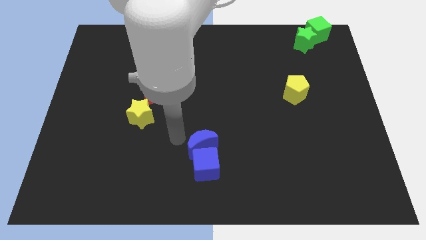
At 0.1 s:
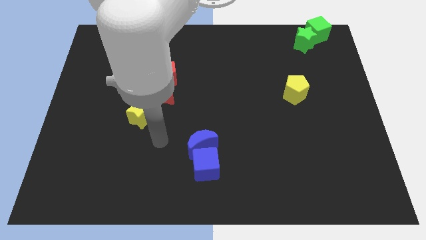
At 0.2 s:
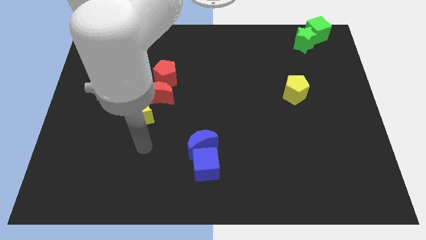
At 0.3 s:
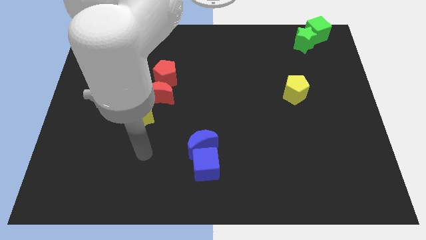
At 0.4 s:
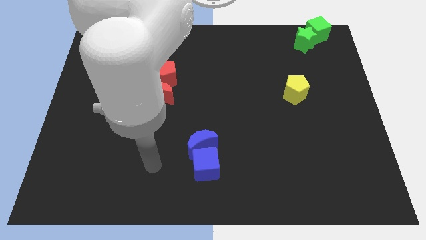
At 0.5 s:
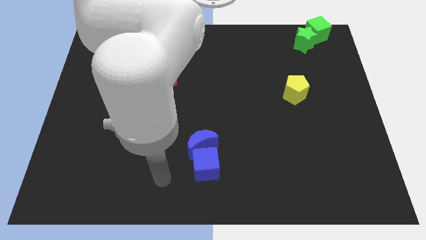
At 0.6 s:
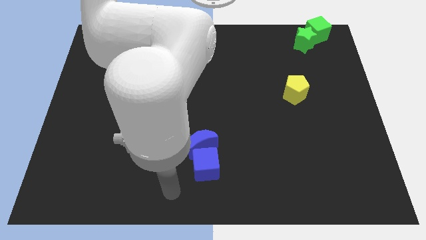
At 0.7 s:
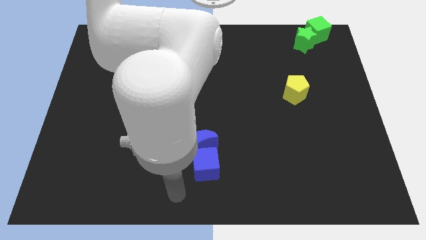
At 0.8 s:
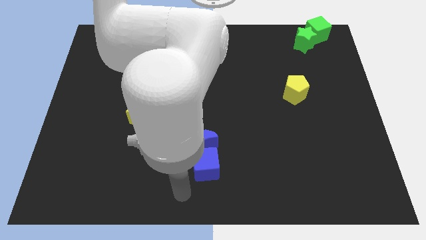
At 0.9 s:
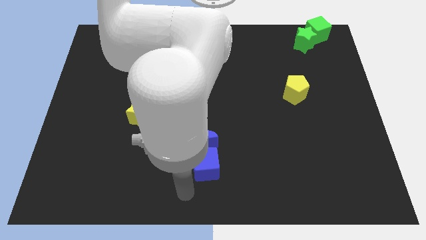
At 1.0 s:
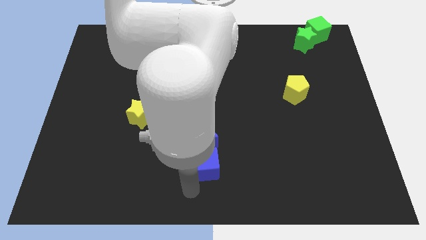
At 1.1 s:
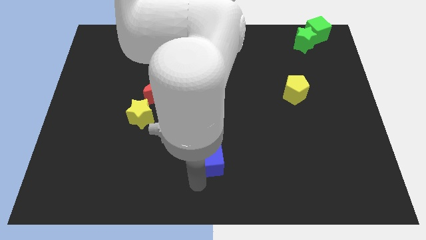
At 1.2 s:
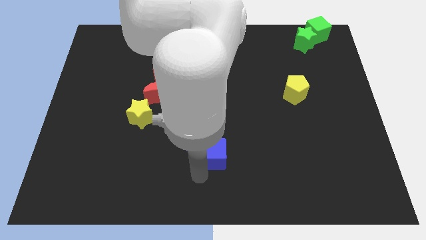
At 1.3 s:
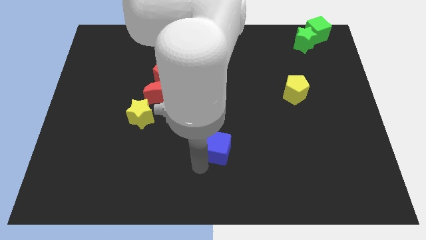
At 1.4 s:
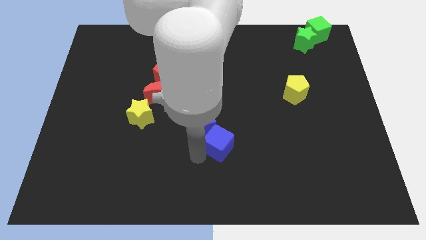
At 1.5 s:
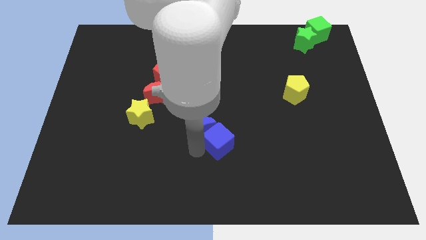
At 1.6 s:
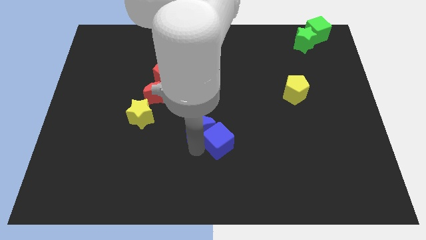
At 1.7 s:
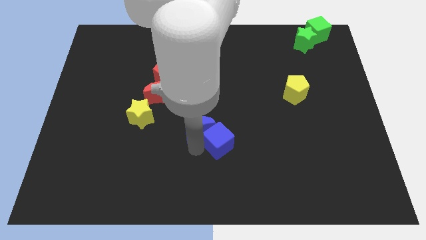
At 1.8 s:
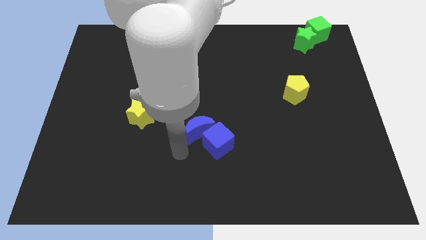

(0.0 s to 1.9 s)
slide both the blue blocks towards the center

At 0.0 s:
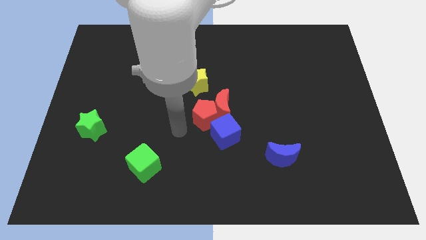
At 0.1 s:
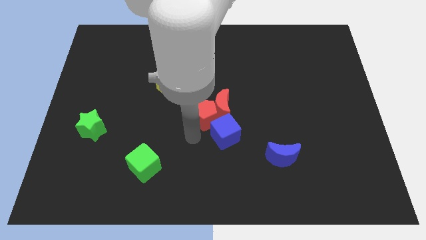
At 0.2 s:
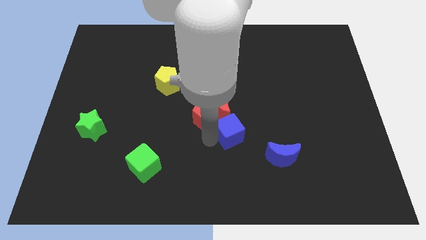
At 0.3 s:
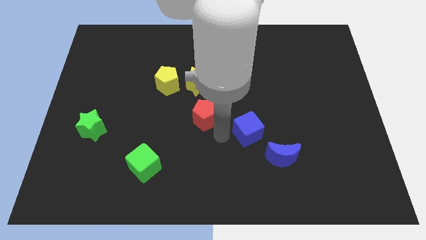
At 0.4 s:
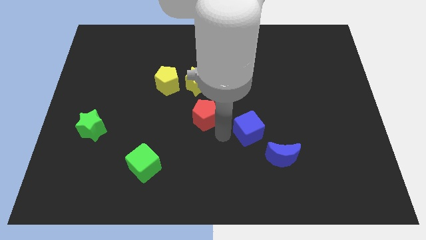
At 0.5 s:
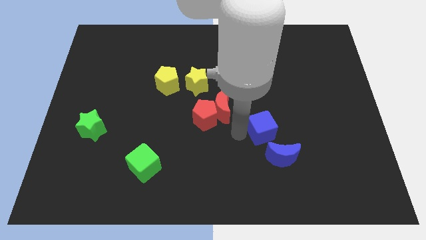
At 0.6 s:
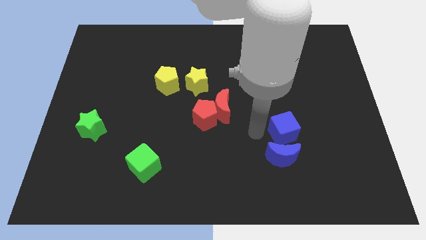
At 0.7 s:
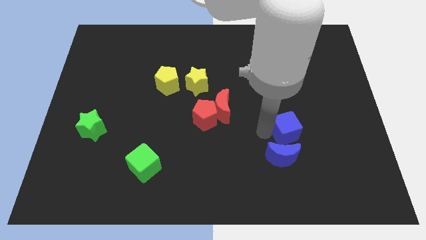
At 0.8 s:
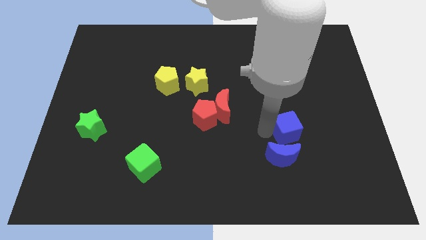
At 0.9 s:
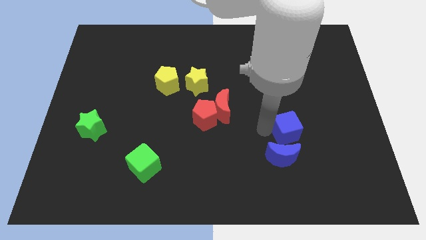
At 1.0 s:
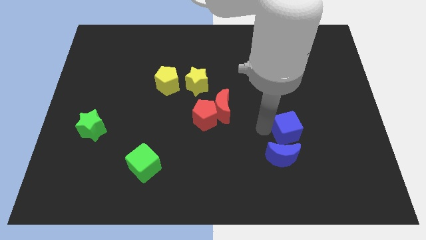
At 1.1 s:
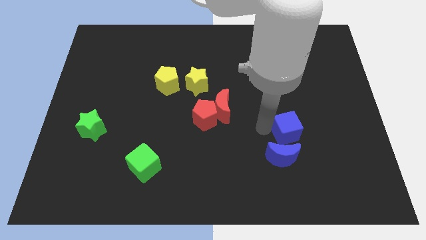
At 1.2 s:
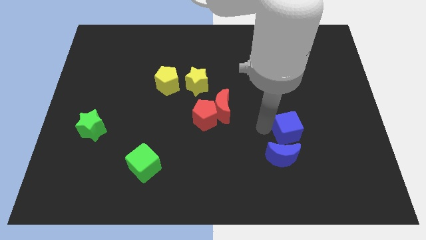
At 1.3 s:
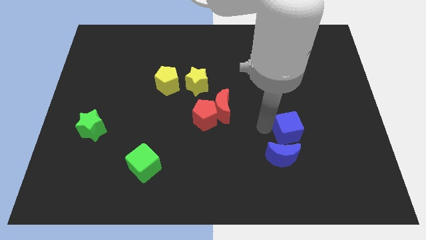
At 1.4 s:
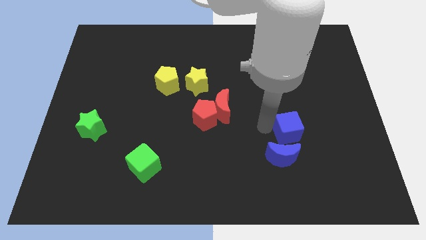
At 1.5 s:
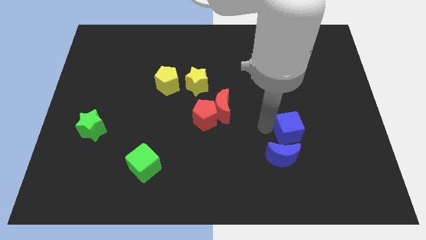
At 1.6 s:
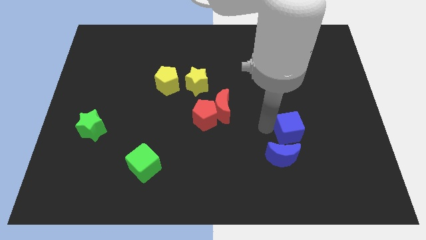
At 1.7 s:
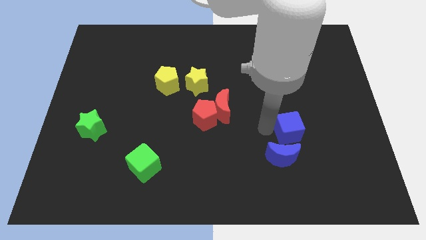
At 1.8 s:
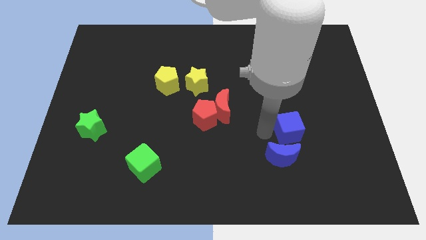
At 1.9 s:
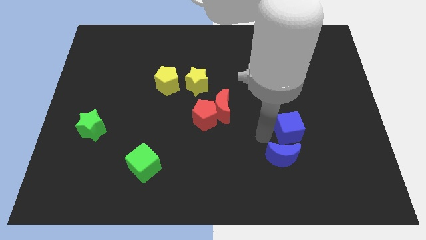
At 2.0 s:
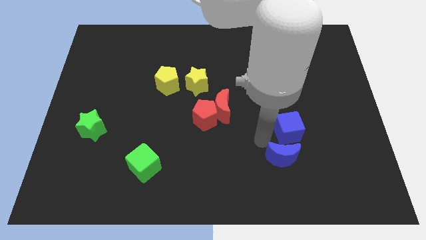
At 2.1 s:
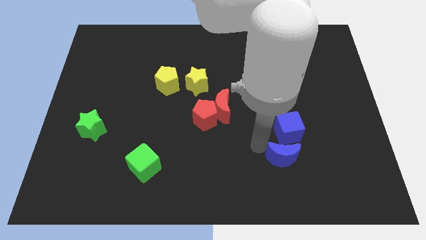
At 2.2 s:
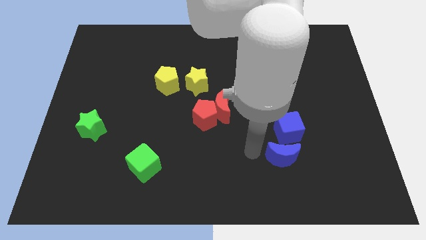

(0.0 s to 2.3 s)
move the blue cube to the right

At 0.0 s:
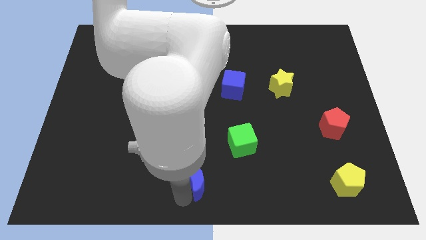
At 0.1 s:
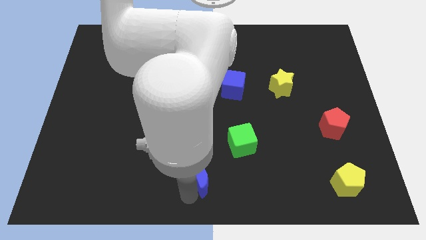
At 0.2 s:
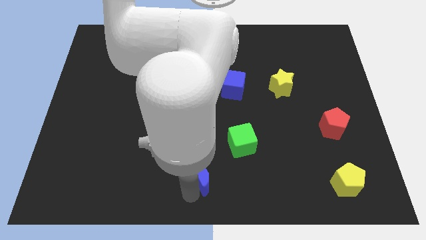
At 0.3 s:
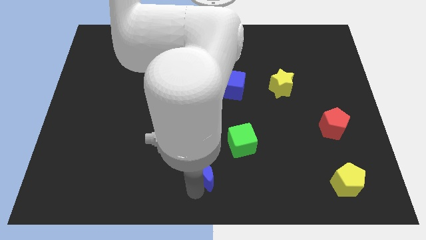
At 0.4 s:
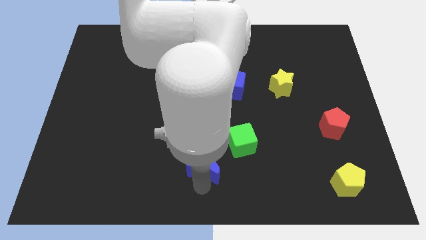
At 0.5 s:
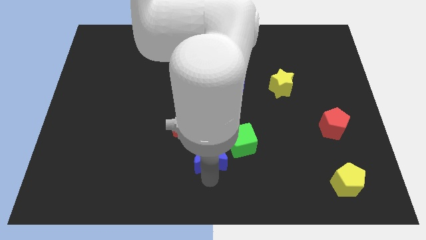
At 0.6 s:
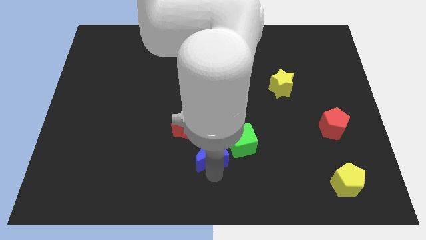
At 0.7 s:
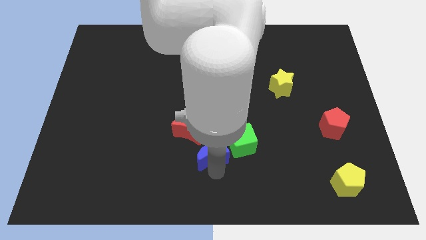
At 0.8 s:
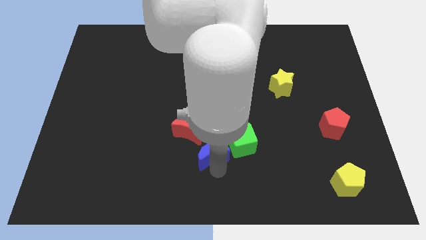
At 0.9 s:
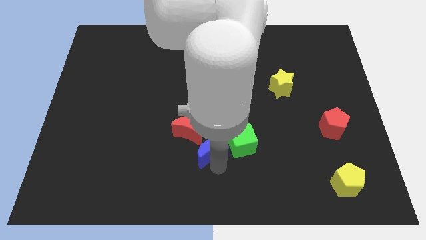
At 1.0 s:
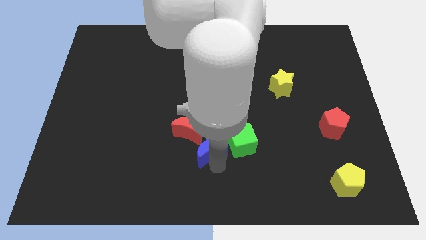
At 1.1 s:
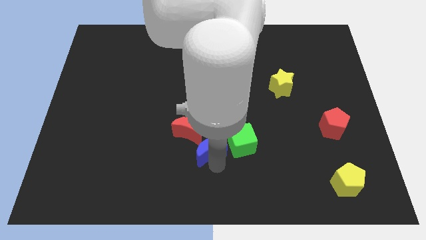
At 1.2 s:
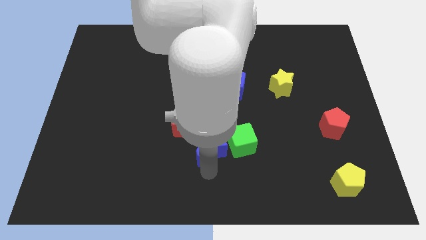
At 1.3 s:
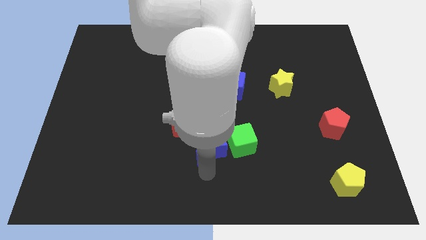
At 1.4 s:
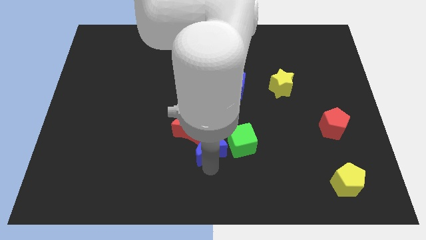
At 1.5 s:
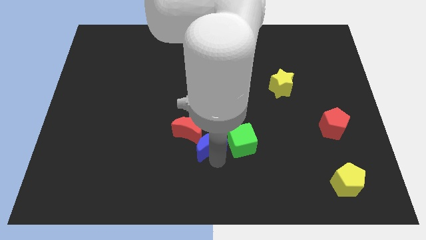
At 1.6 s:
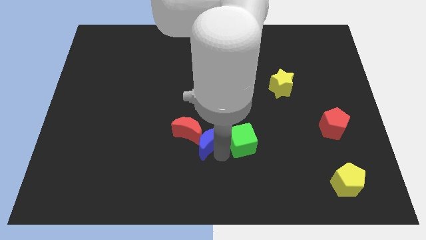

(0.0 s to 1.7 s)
move the blue crescent between the green cube red crescent

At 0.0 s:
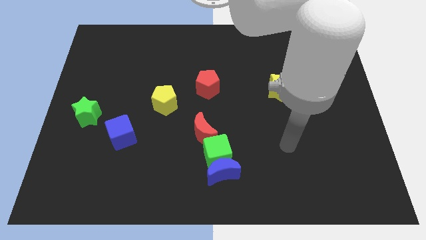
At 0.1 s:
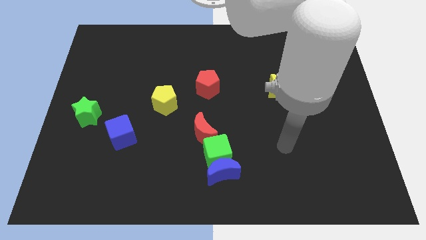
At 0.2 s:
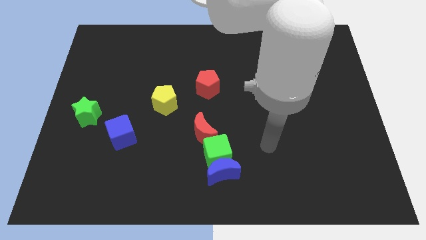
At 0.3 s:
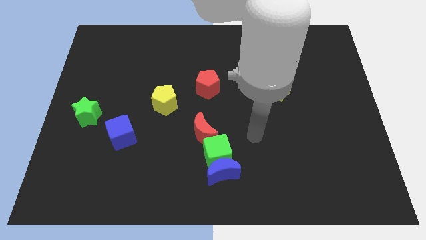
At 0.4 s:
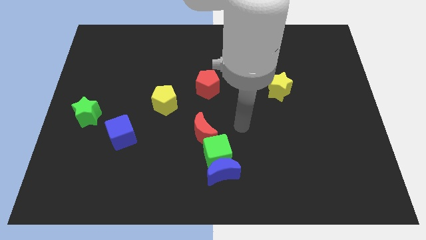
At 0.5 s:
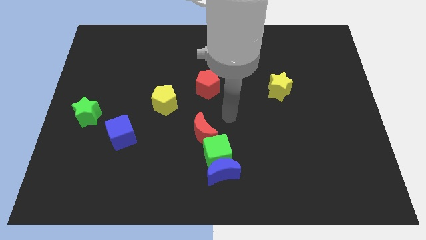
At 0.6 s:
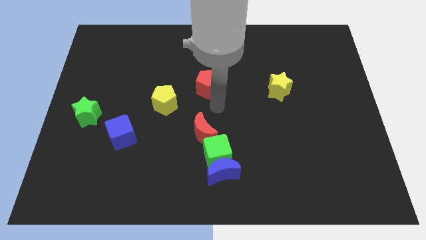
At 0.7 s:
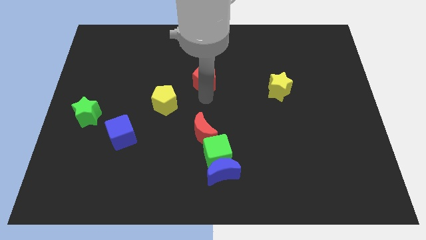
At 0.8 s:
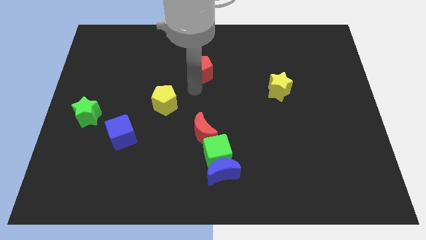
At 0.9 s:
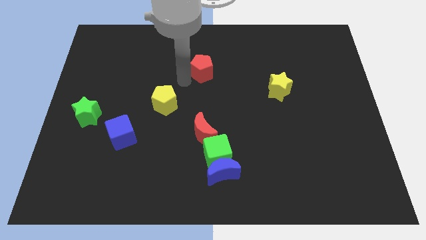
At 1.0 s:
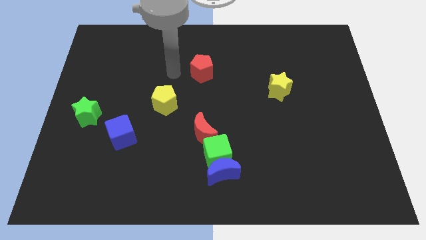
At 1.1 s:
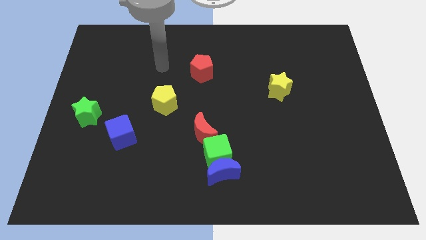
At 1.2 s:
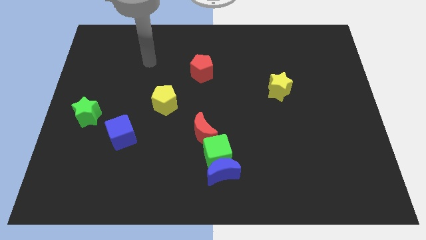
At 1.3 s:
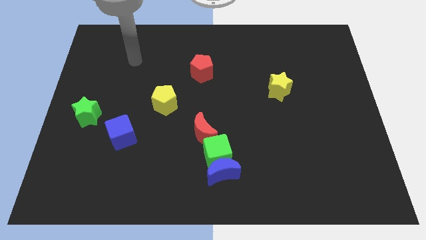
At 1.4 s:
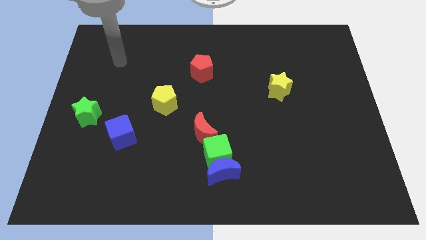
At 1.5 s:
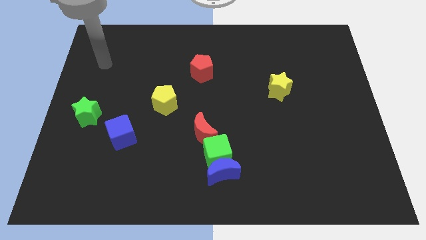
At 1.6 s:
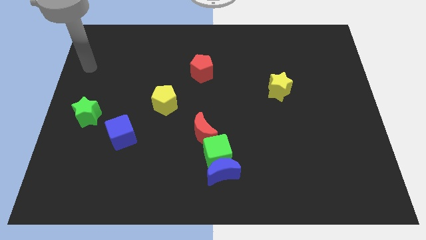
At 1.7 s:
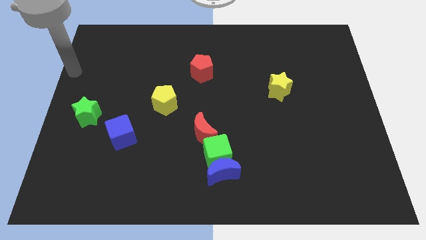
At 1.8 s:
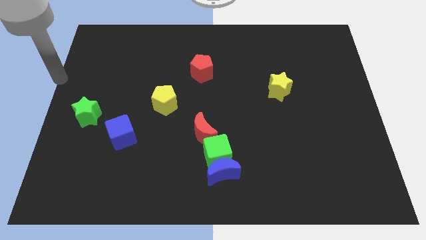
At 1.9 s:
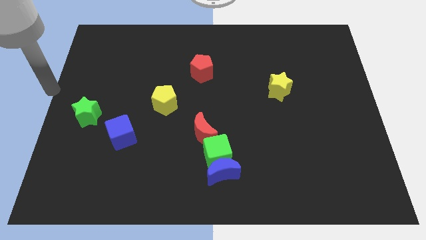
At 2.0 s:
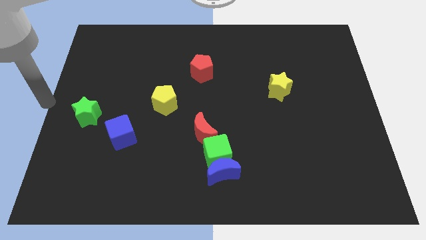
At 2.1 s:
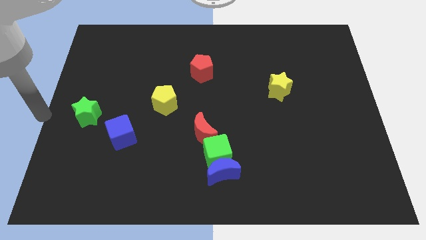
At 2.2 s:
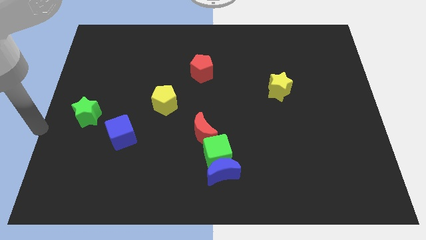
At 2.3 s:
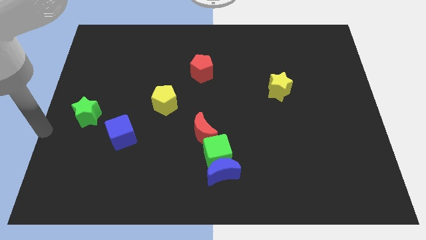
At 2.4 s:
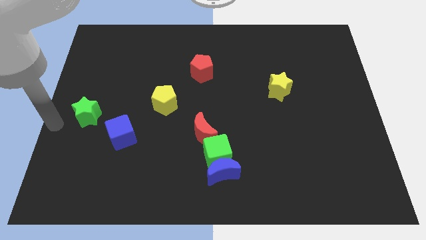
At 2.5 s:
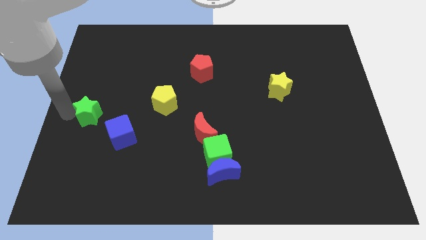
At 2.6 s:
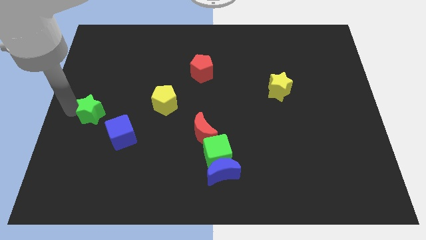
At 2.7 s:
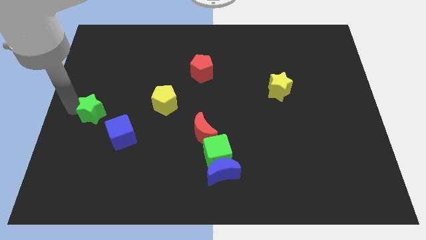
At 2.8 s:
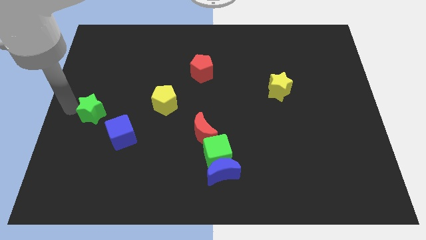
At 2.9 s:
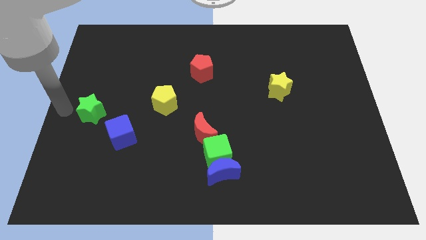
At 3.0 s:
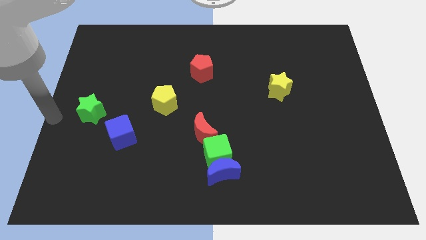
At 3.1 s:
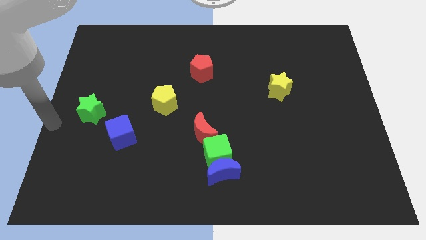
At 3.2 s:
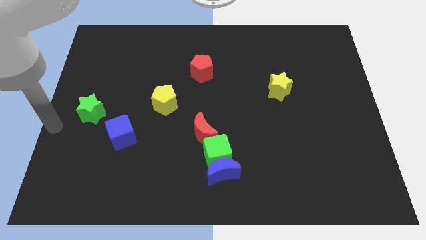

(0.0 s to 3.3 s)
touch the red pentagon and the green star
